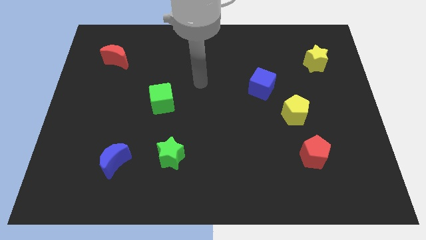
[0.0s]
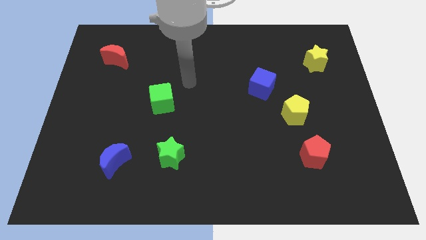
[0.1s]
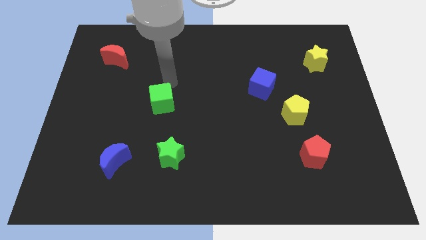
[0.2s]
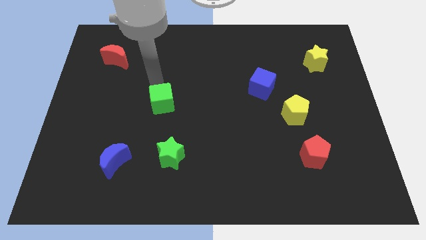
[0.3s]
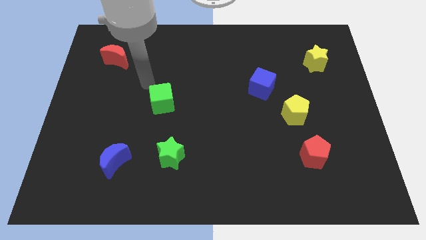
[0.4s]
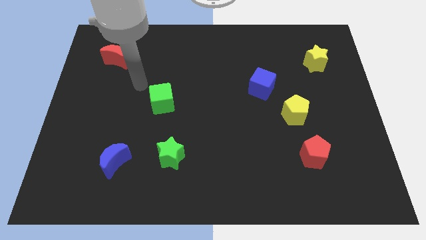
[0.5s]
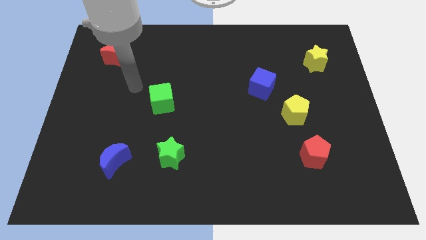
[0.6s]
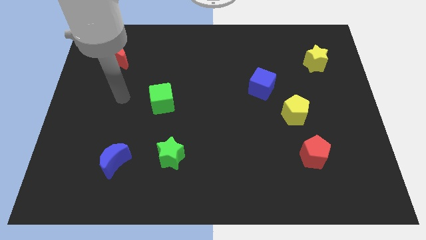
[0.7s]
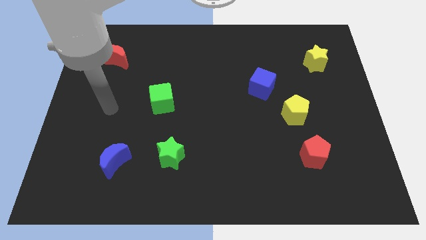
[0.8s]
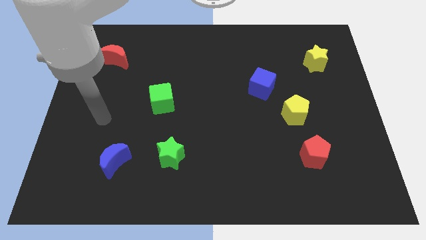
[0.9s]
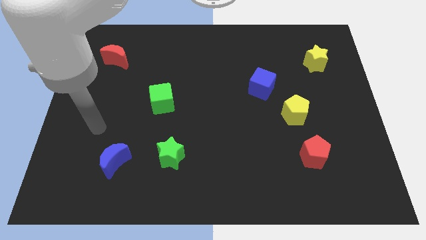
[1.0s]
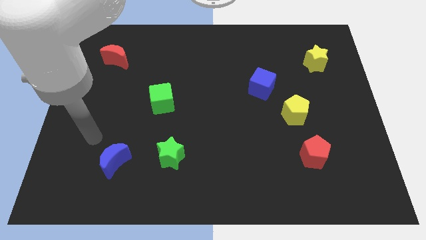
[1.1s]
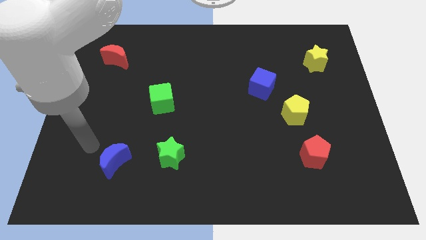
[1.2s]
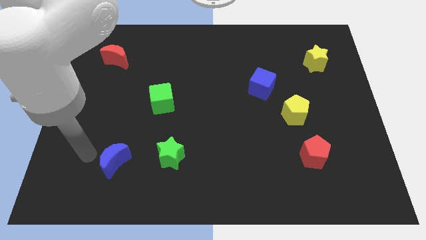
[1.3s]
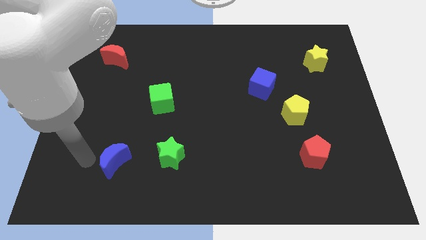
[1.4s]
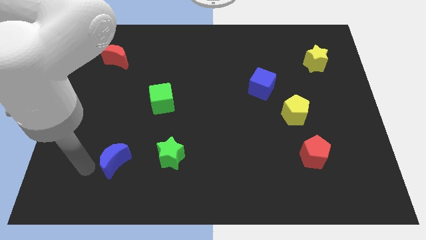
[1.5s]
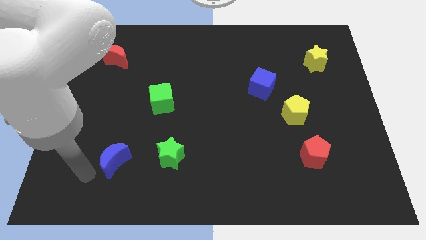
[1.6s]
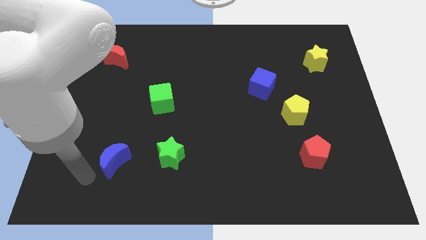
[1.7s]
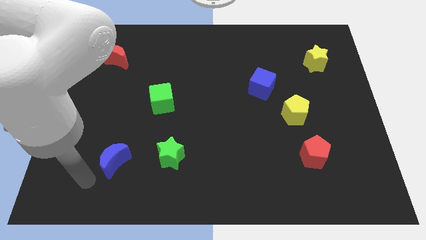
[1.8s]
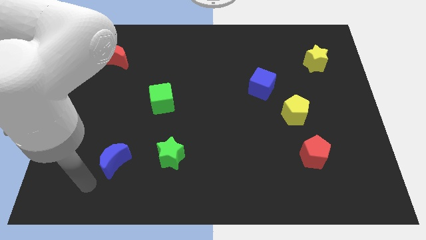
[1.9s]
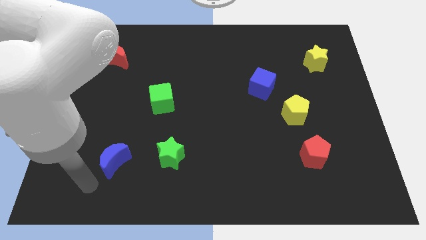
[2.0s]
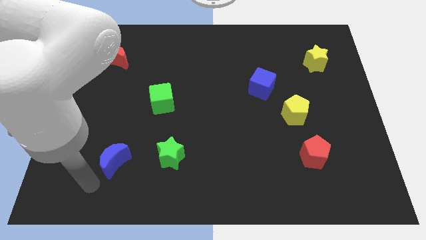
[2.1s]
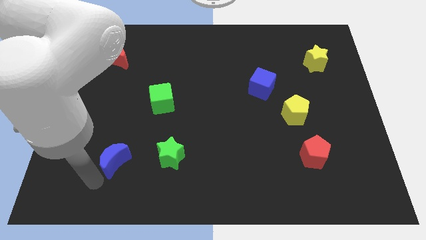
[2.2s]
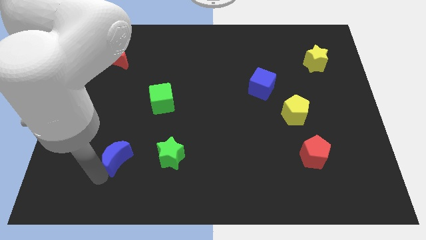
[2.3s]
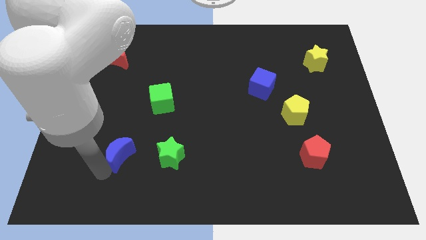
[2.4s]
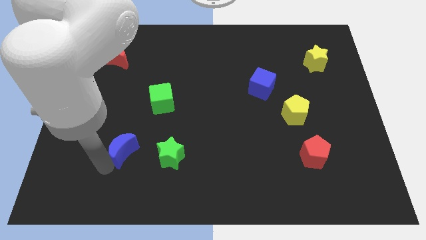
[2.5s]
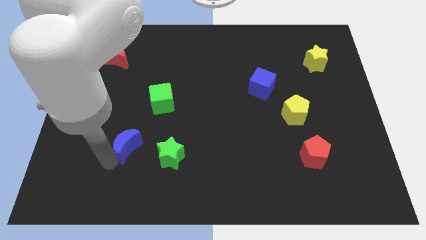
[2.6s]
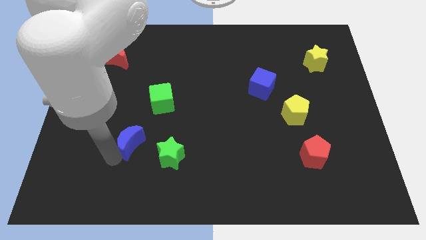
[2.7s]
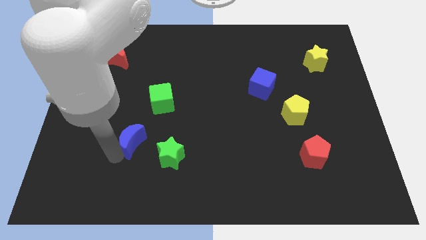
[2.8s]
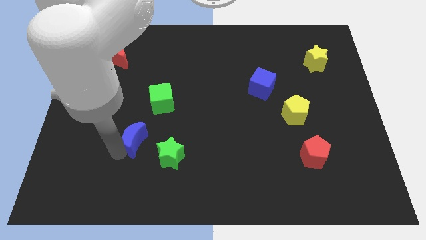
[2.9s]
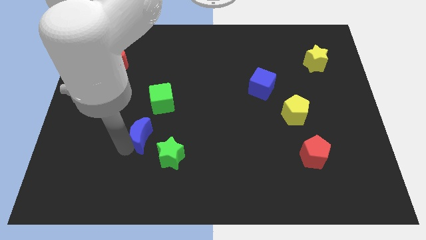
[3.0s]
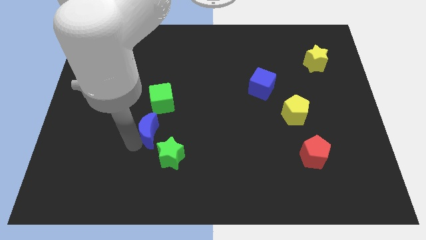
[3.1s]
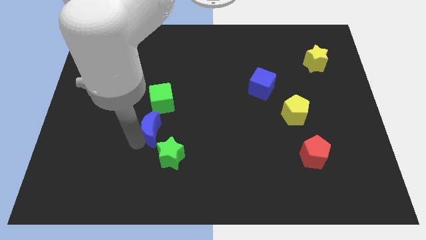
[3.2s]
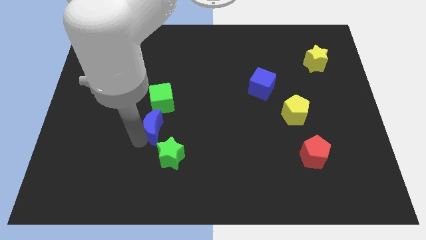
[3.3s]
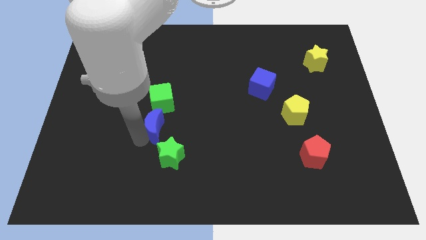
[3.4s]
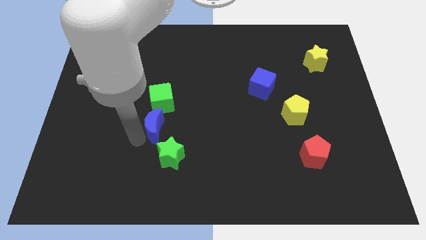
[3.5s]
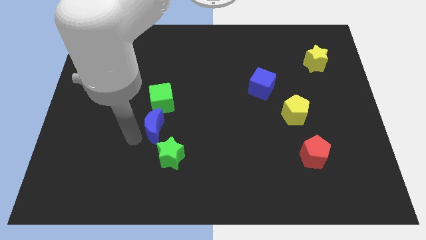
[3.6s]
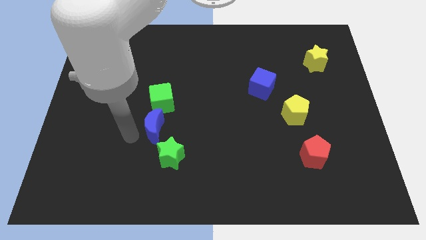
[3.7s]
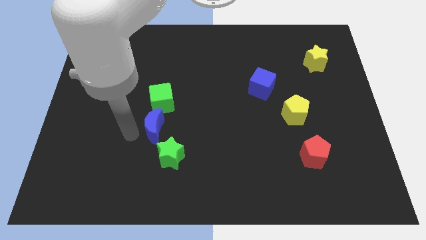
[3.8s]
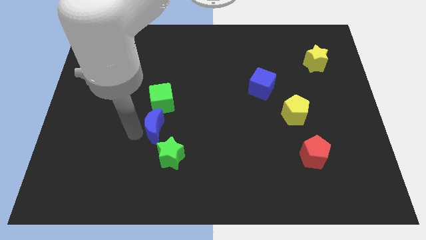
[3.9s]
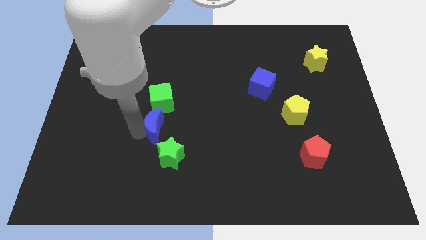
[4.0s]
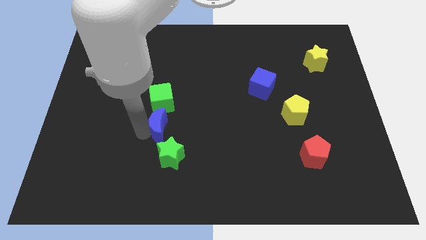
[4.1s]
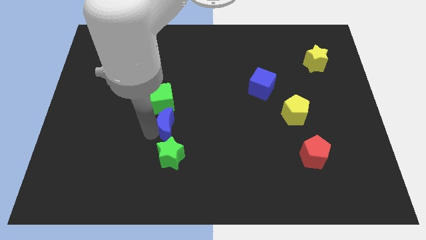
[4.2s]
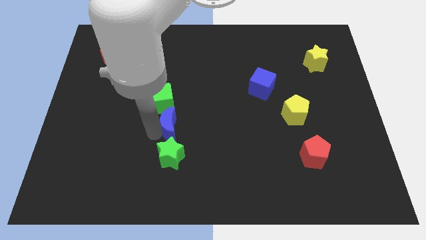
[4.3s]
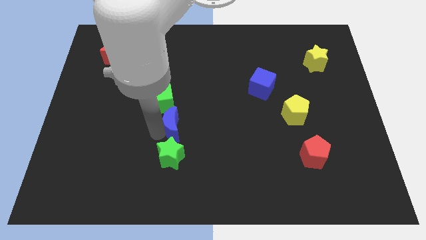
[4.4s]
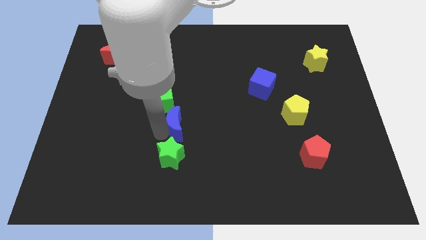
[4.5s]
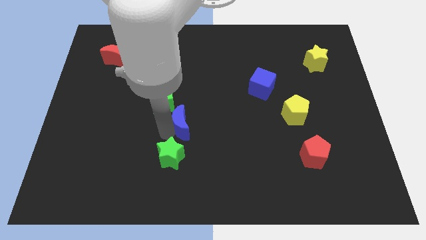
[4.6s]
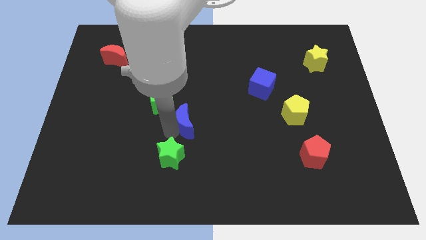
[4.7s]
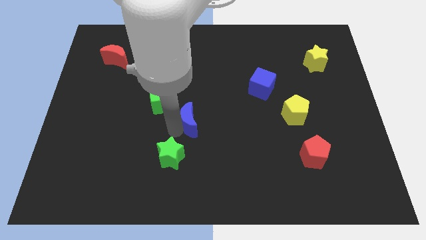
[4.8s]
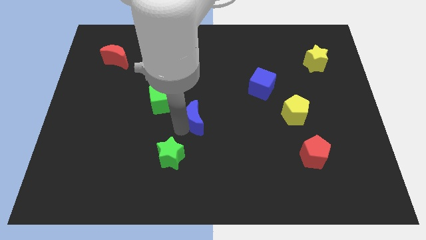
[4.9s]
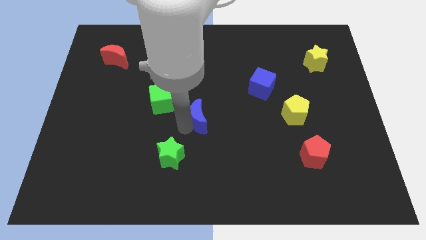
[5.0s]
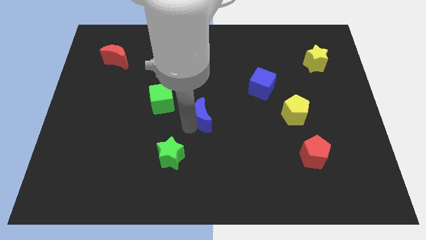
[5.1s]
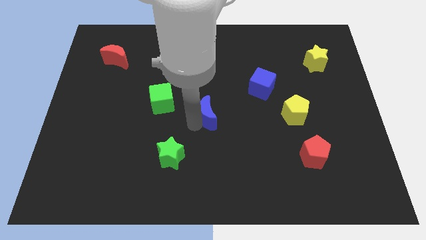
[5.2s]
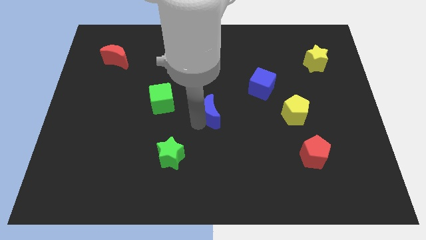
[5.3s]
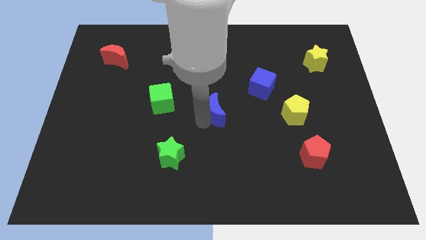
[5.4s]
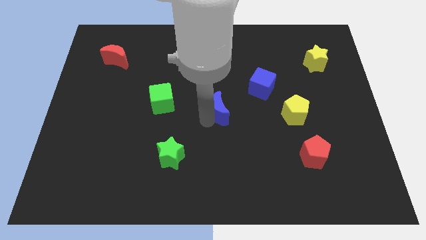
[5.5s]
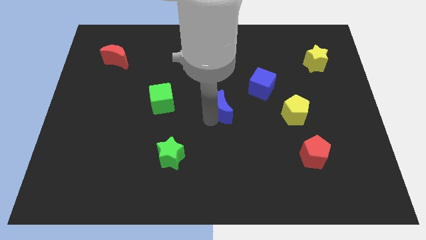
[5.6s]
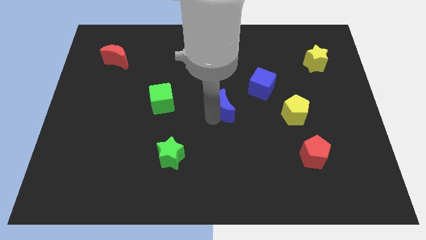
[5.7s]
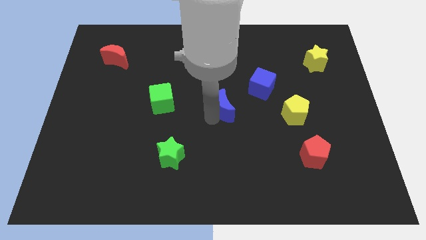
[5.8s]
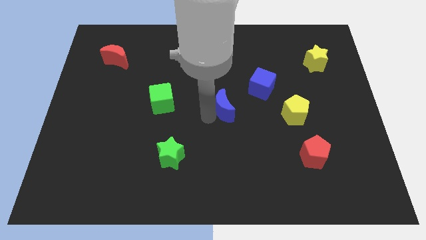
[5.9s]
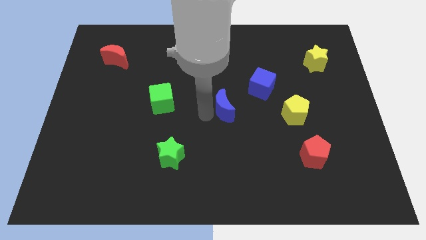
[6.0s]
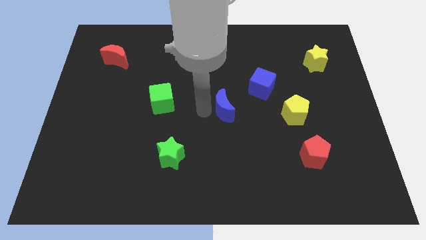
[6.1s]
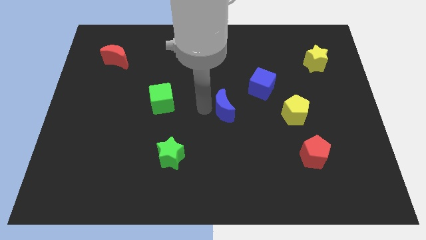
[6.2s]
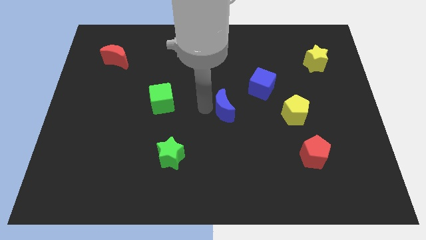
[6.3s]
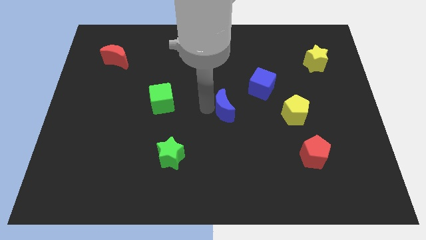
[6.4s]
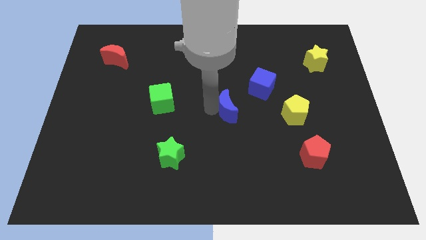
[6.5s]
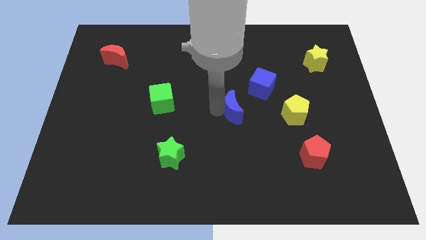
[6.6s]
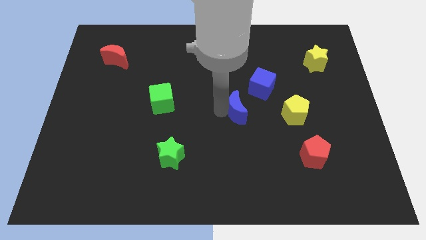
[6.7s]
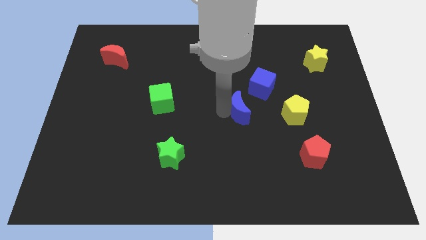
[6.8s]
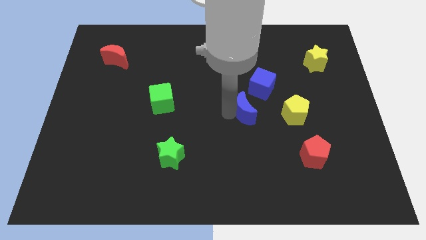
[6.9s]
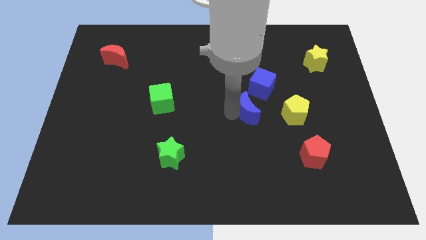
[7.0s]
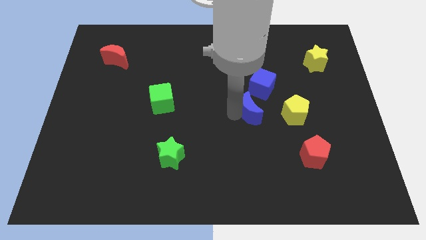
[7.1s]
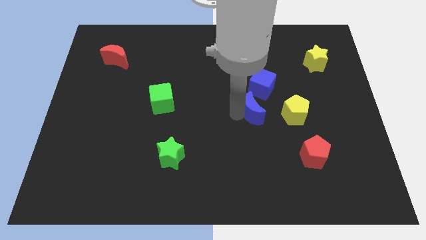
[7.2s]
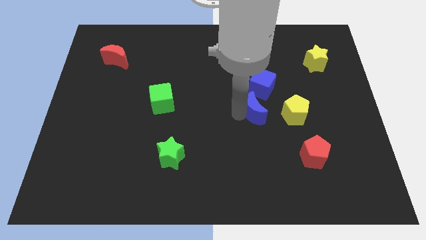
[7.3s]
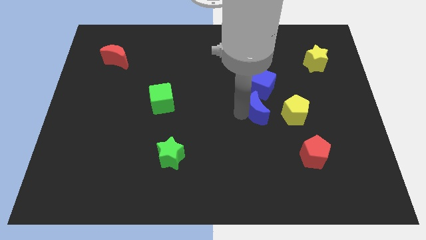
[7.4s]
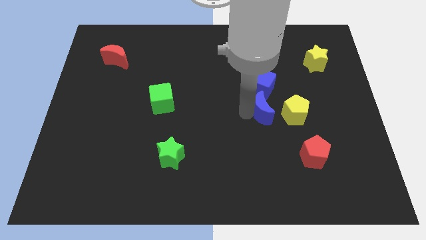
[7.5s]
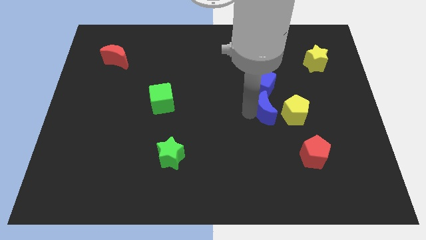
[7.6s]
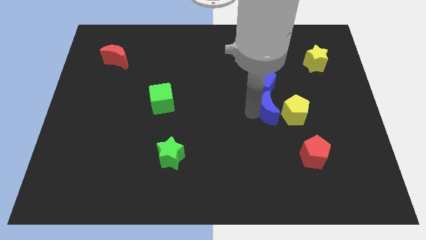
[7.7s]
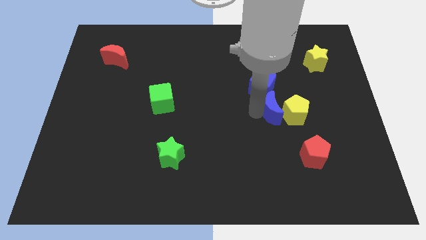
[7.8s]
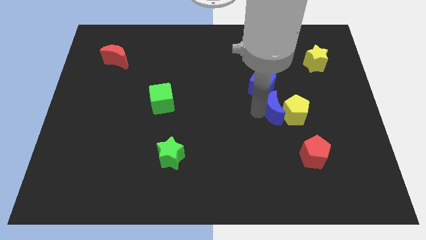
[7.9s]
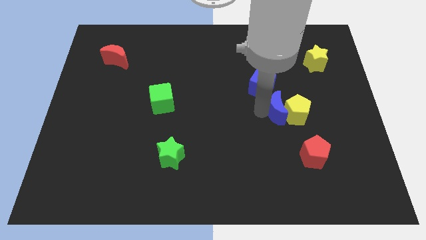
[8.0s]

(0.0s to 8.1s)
put the blue moon towards the yellow pentagon
